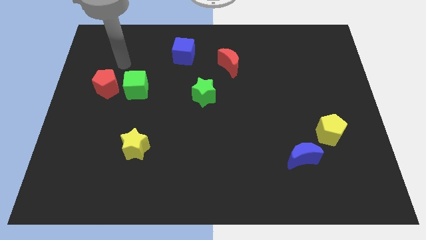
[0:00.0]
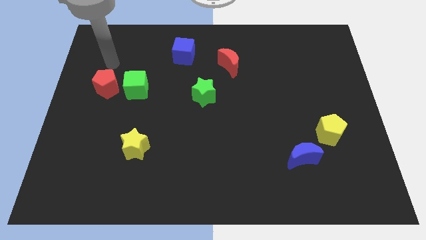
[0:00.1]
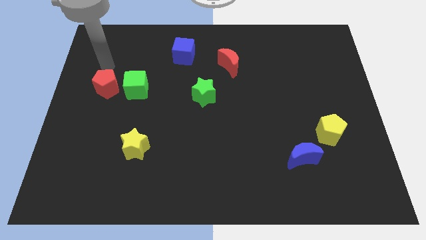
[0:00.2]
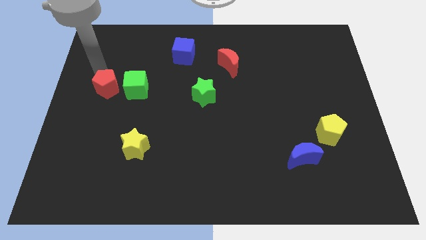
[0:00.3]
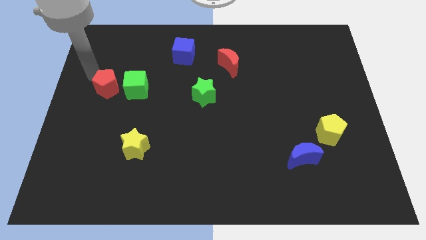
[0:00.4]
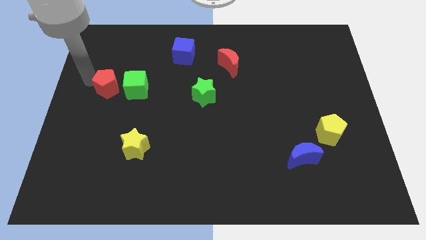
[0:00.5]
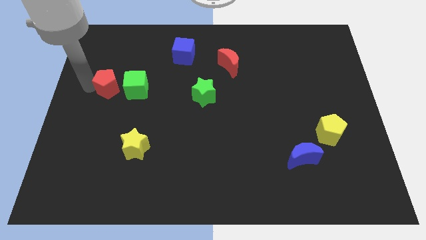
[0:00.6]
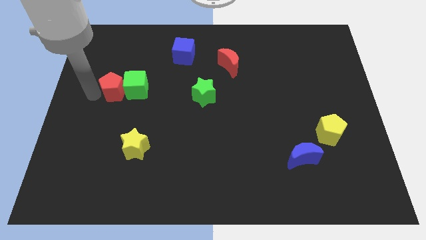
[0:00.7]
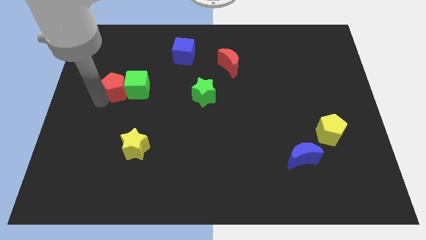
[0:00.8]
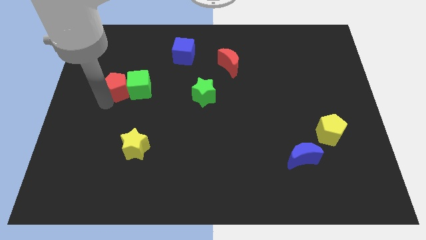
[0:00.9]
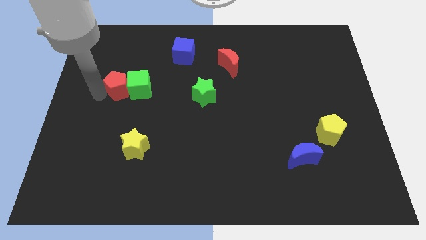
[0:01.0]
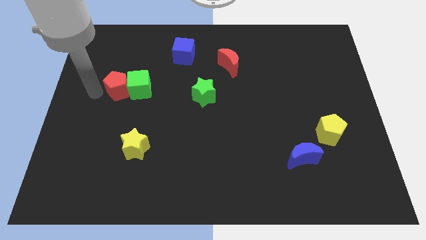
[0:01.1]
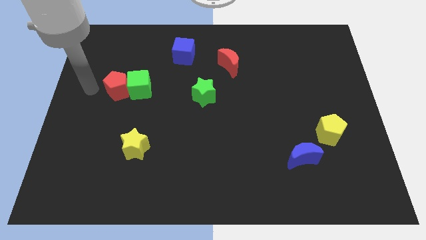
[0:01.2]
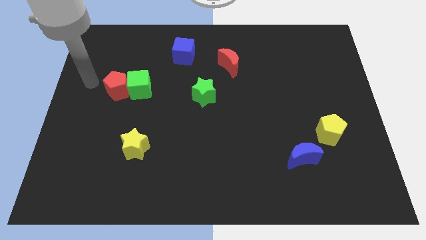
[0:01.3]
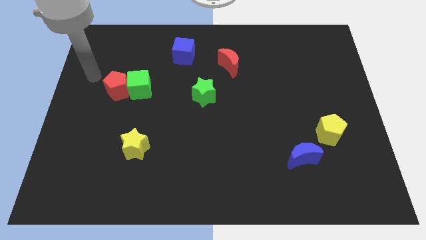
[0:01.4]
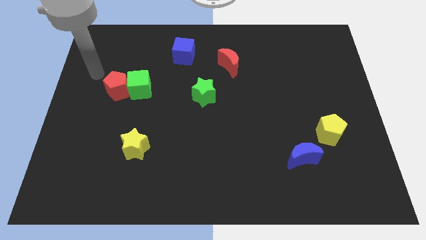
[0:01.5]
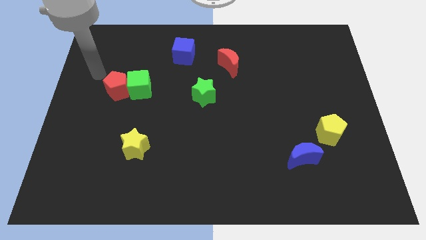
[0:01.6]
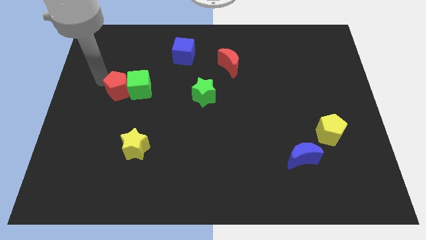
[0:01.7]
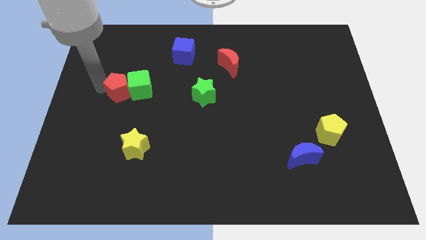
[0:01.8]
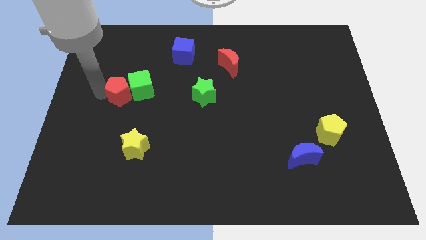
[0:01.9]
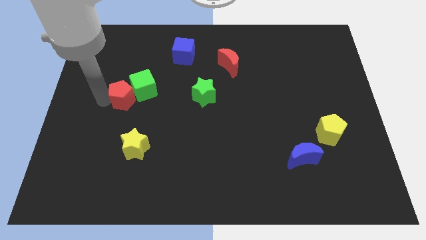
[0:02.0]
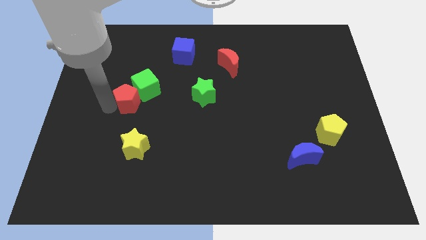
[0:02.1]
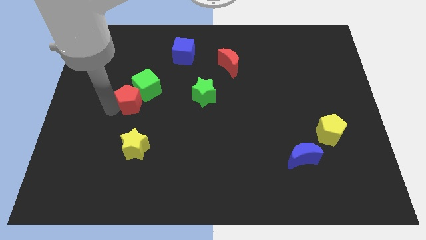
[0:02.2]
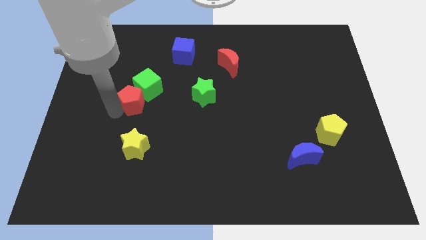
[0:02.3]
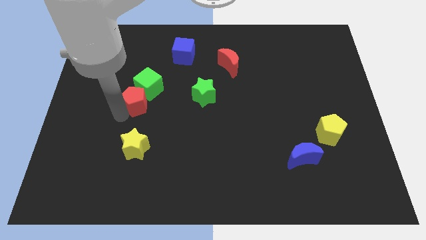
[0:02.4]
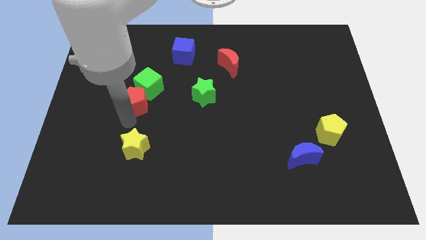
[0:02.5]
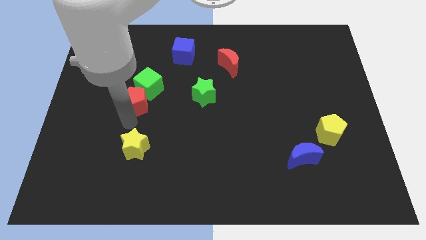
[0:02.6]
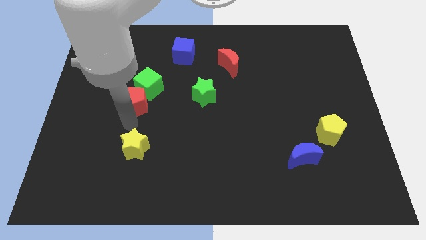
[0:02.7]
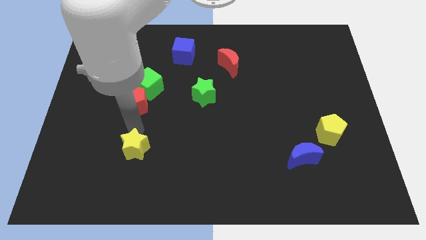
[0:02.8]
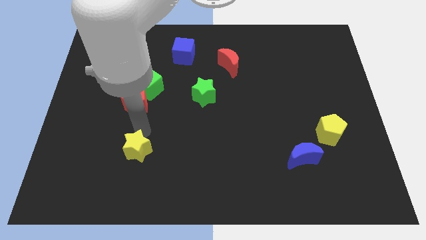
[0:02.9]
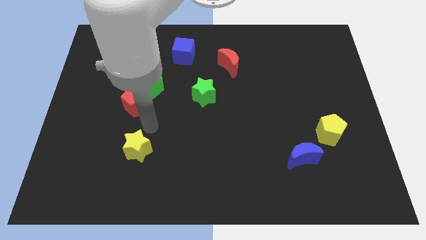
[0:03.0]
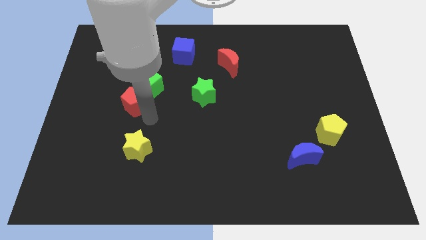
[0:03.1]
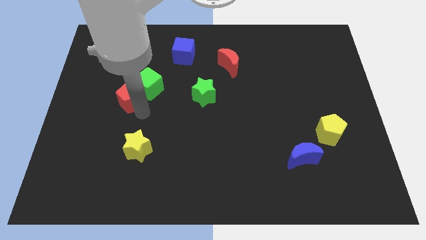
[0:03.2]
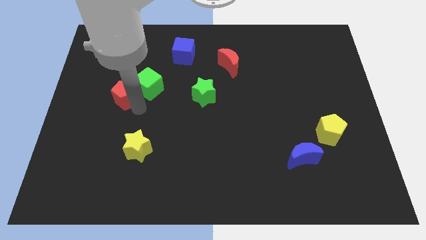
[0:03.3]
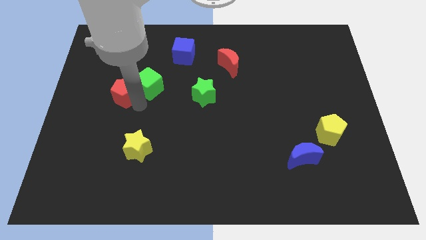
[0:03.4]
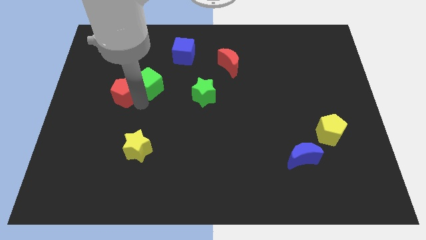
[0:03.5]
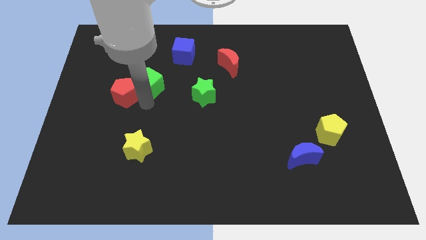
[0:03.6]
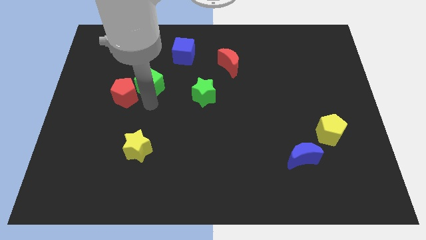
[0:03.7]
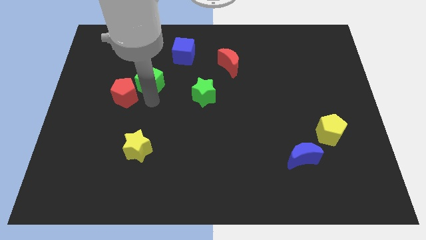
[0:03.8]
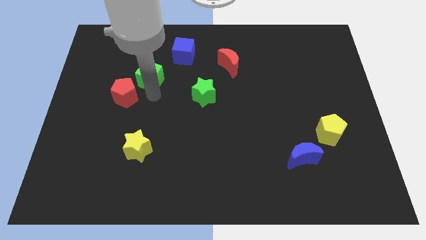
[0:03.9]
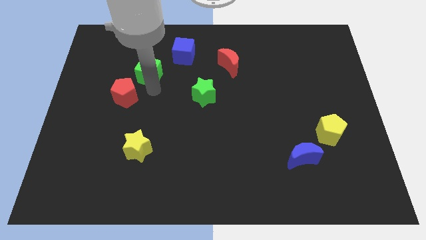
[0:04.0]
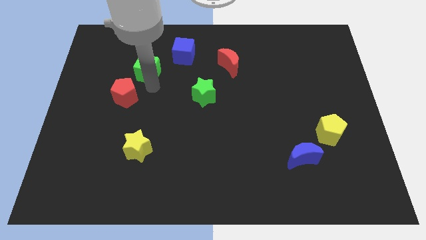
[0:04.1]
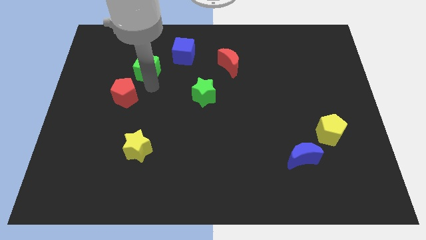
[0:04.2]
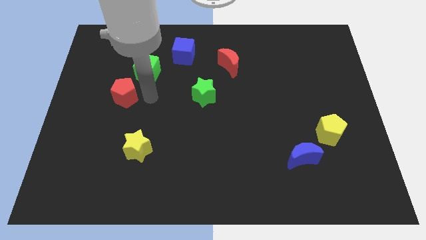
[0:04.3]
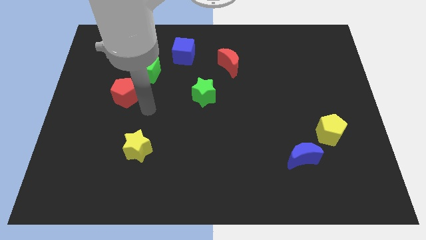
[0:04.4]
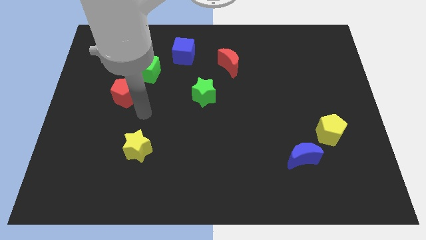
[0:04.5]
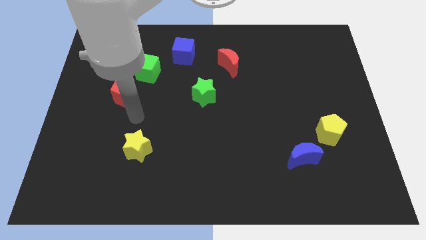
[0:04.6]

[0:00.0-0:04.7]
place the green cube in between the red pentagon and blue cube
